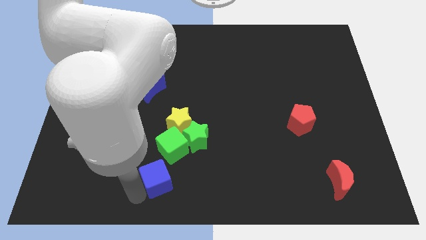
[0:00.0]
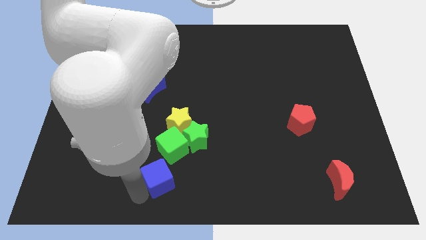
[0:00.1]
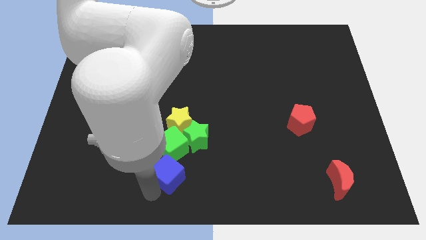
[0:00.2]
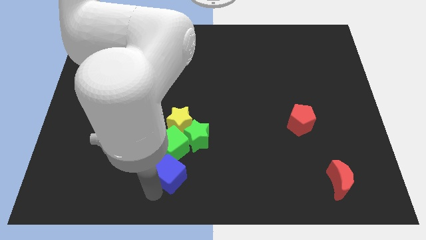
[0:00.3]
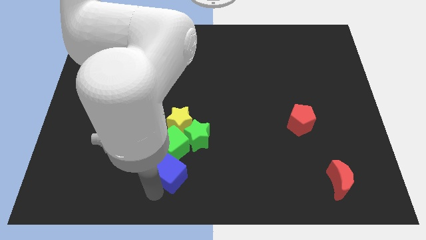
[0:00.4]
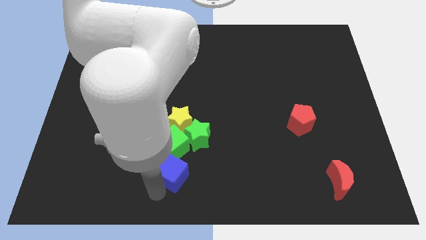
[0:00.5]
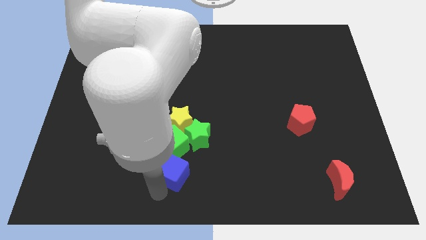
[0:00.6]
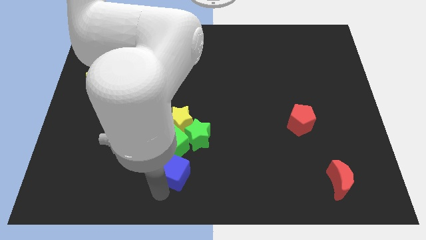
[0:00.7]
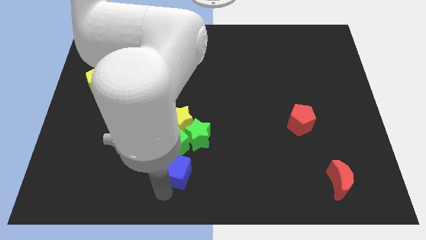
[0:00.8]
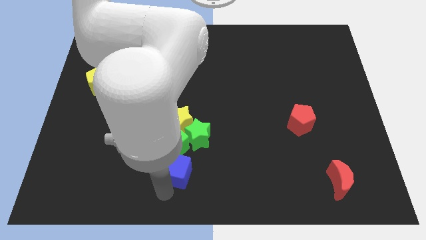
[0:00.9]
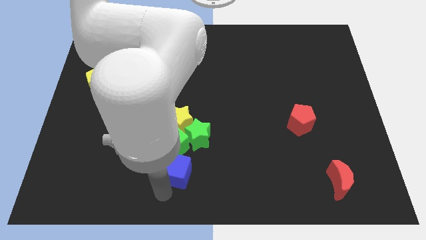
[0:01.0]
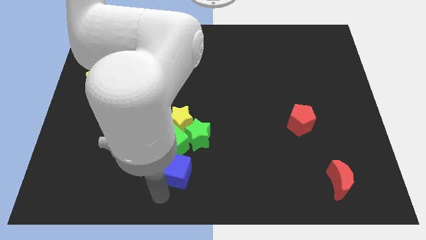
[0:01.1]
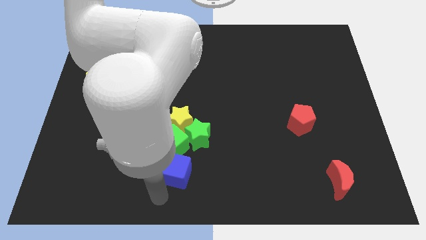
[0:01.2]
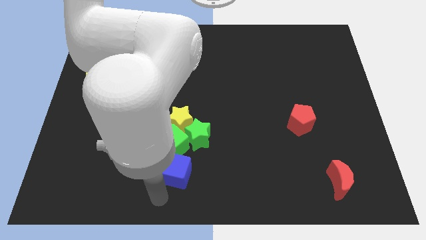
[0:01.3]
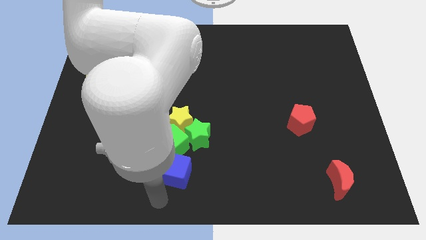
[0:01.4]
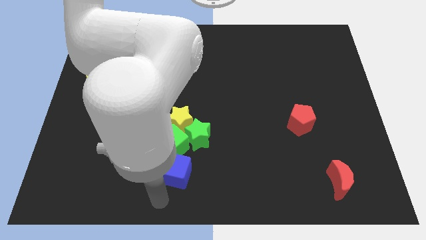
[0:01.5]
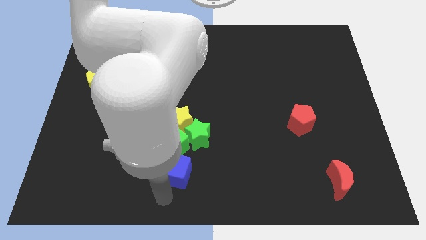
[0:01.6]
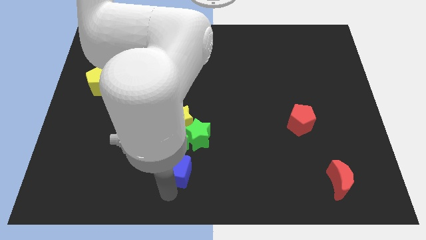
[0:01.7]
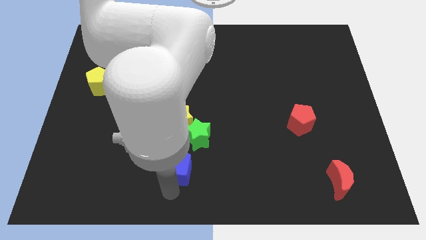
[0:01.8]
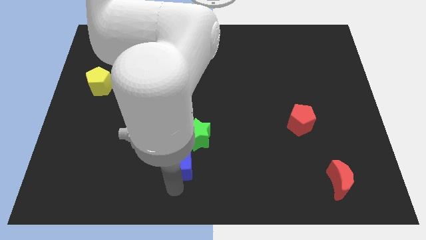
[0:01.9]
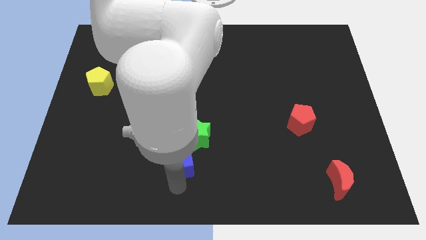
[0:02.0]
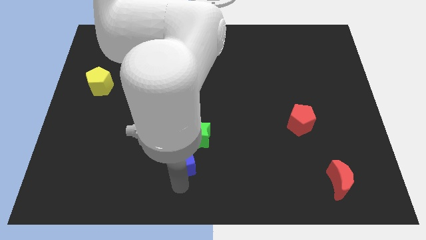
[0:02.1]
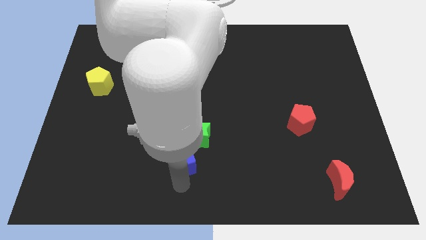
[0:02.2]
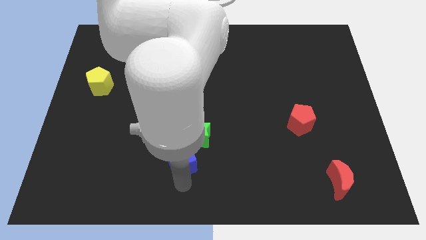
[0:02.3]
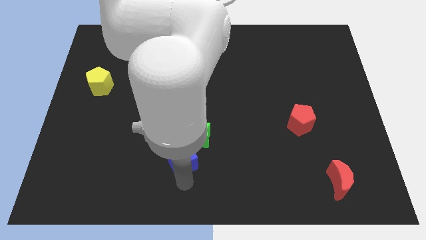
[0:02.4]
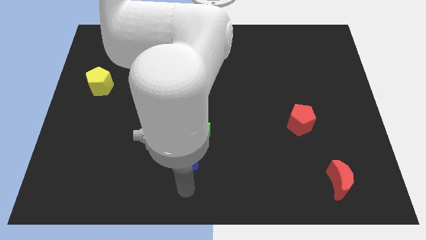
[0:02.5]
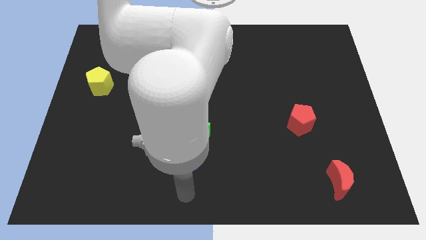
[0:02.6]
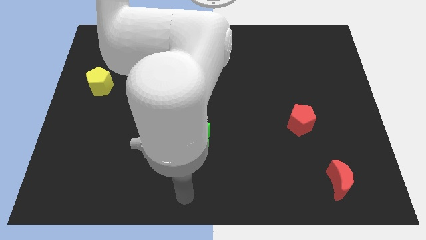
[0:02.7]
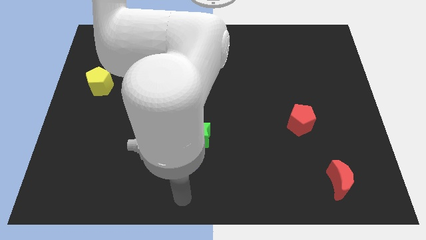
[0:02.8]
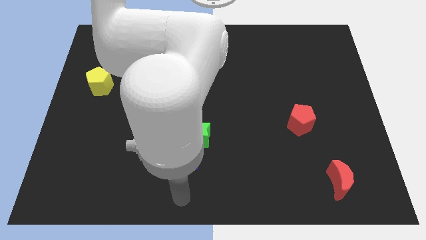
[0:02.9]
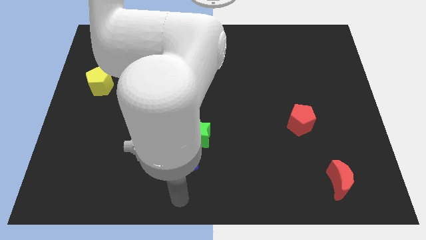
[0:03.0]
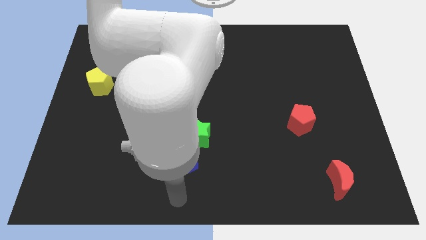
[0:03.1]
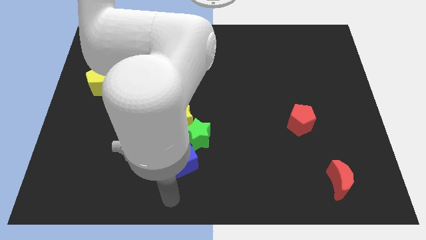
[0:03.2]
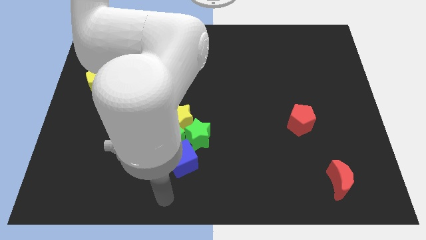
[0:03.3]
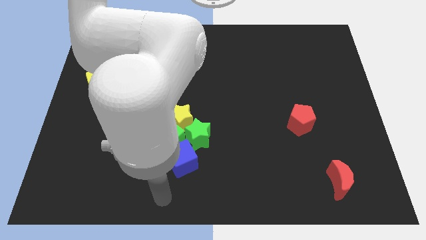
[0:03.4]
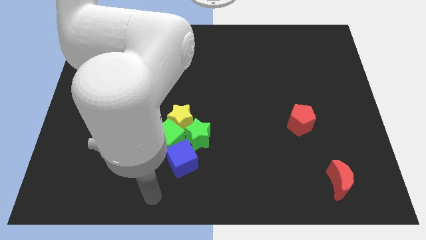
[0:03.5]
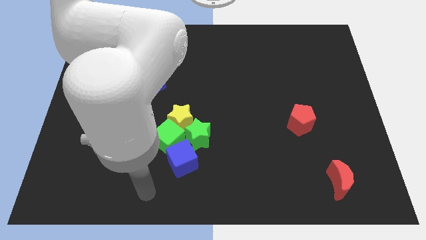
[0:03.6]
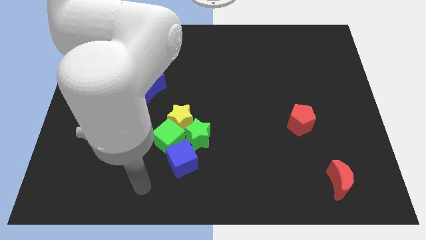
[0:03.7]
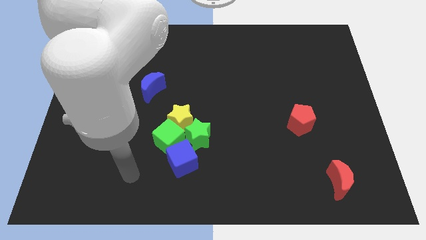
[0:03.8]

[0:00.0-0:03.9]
push the blue cube into the green cube

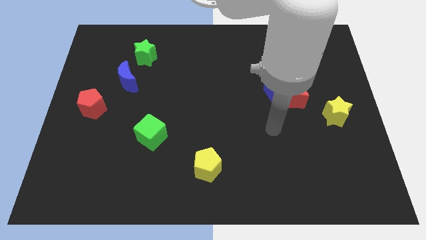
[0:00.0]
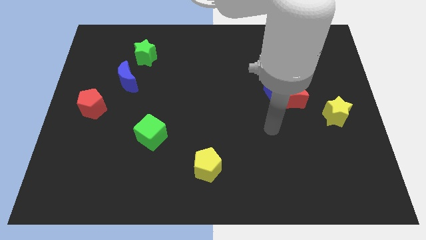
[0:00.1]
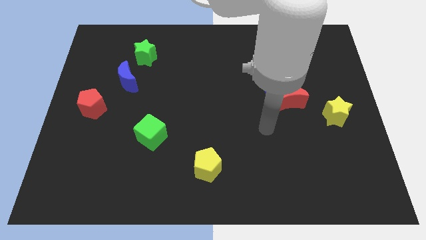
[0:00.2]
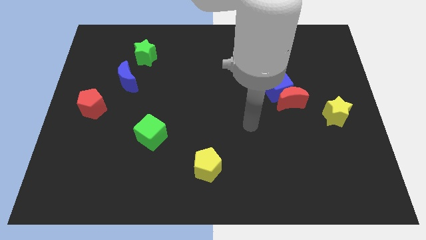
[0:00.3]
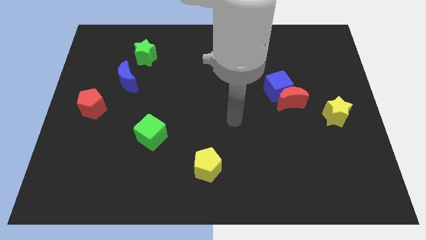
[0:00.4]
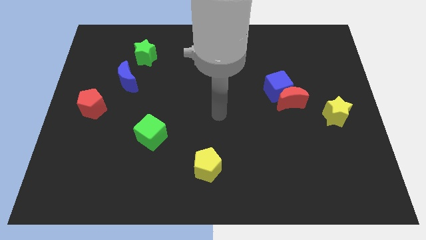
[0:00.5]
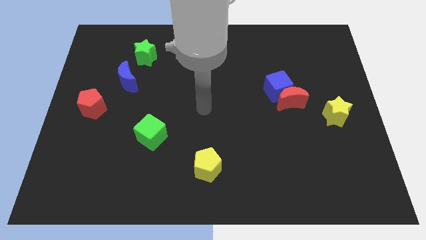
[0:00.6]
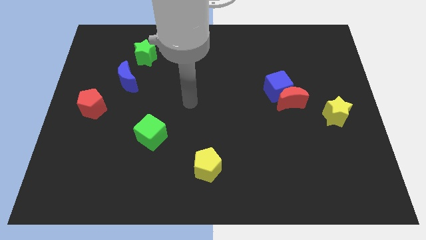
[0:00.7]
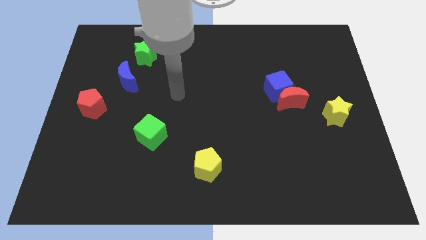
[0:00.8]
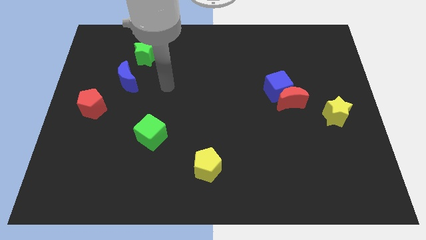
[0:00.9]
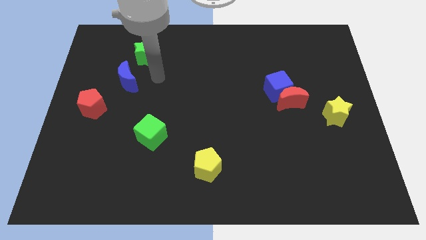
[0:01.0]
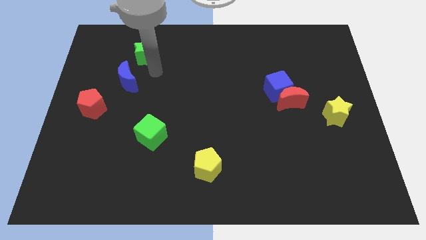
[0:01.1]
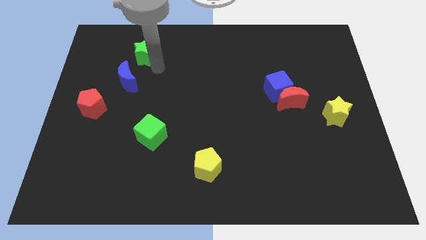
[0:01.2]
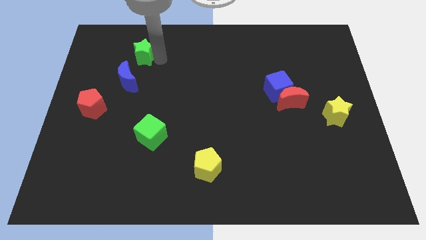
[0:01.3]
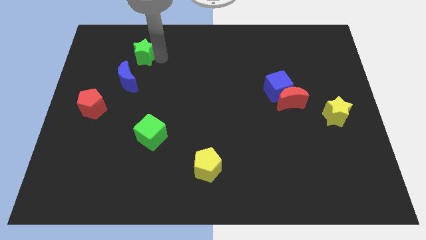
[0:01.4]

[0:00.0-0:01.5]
place the arm right to the green star

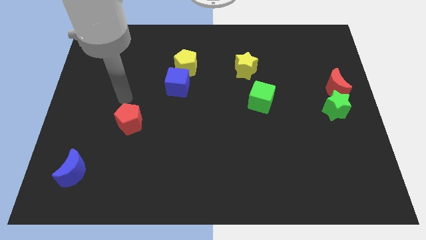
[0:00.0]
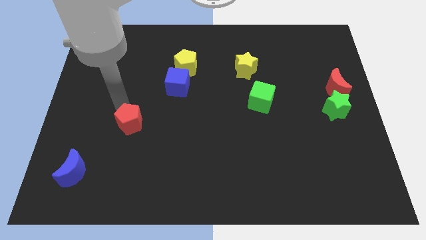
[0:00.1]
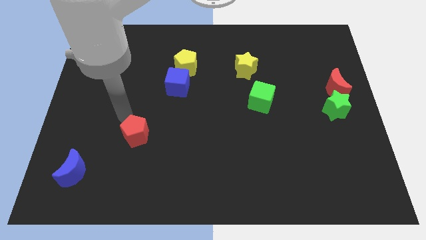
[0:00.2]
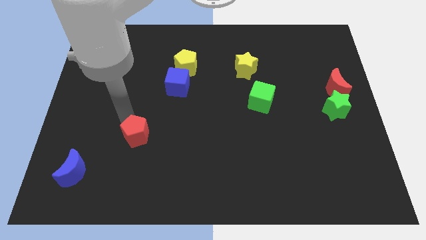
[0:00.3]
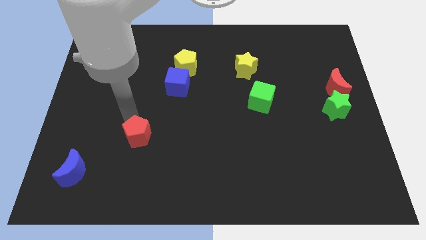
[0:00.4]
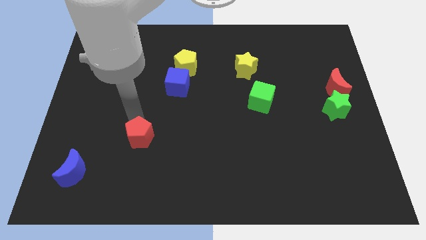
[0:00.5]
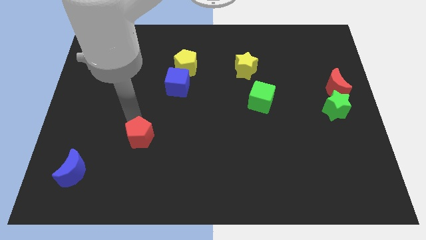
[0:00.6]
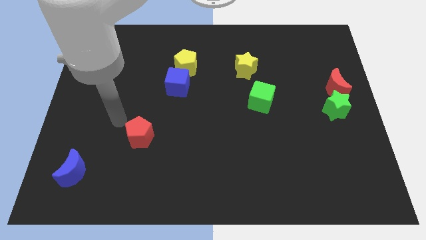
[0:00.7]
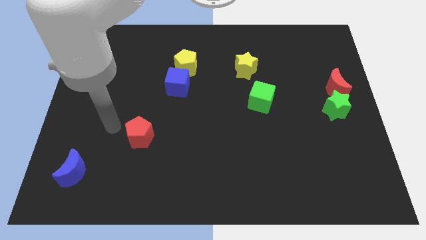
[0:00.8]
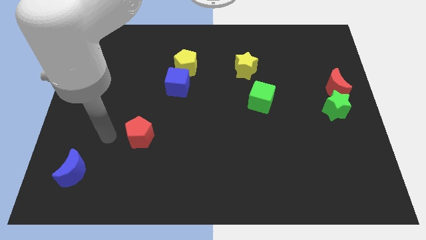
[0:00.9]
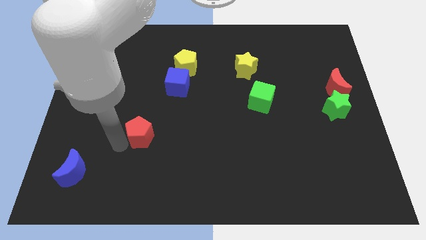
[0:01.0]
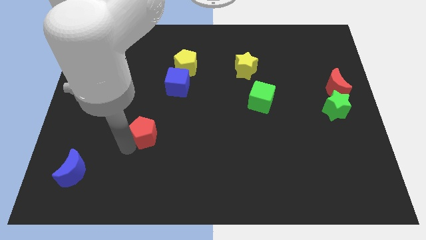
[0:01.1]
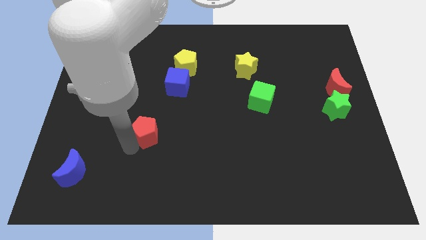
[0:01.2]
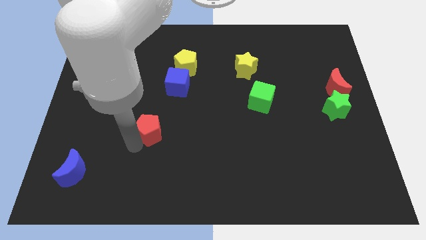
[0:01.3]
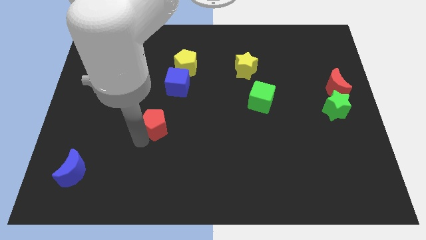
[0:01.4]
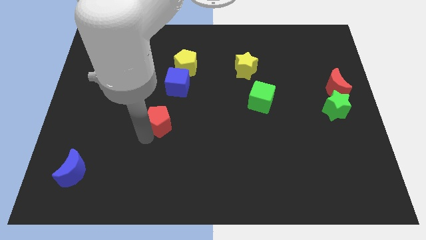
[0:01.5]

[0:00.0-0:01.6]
move the red pentagon to the right of the board

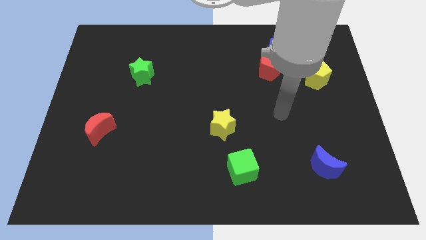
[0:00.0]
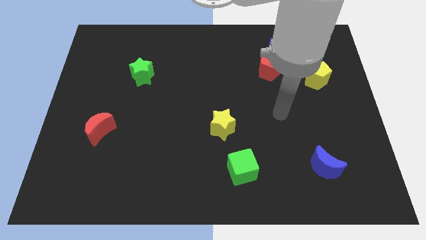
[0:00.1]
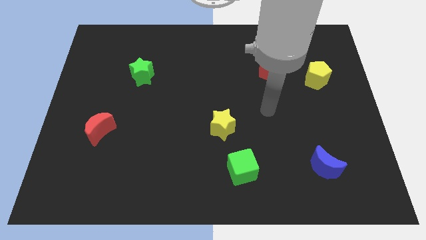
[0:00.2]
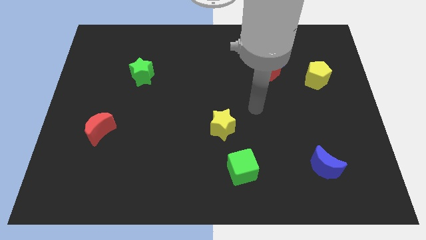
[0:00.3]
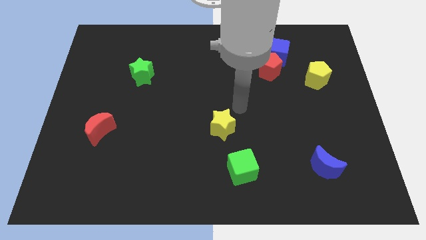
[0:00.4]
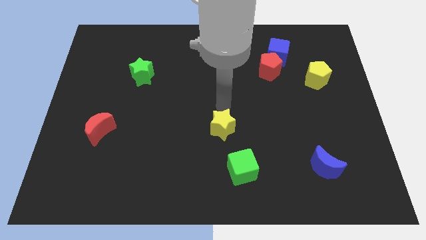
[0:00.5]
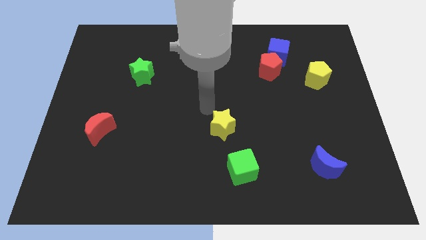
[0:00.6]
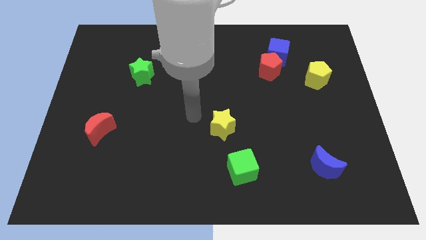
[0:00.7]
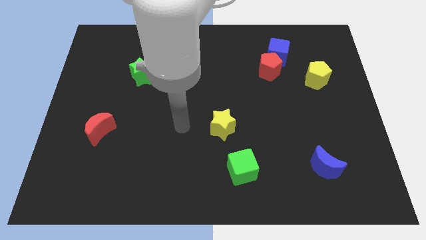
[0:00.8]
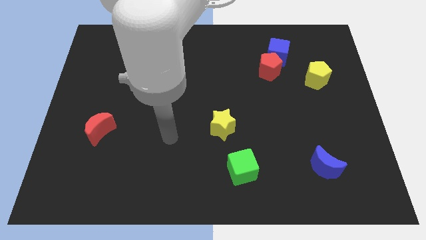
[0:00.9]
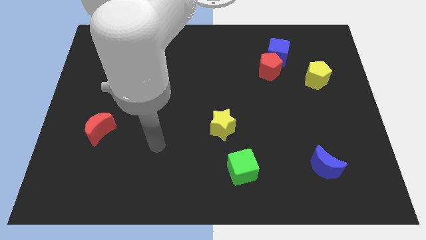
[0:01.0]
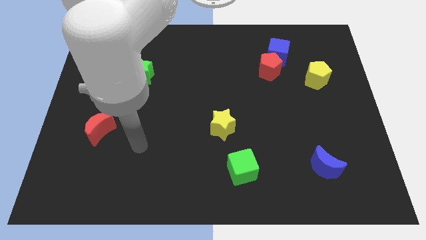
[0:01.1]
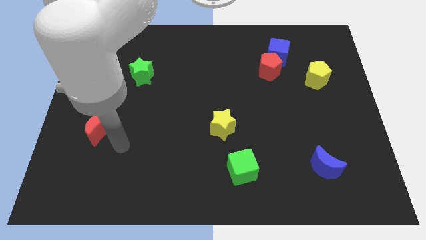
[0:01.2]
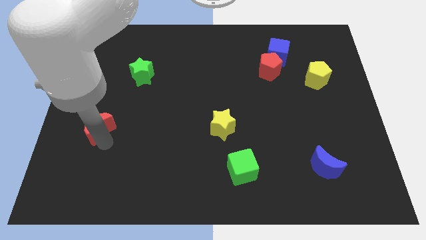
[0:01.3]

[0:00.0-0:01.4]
move your arm towards the red crescent

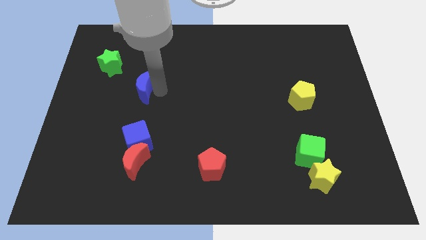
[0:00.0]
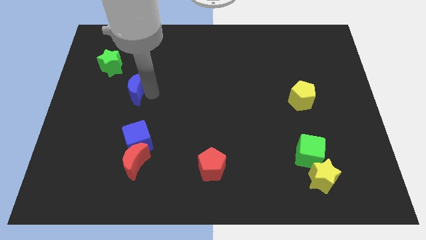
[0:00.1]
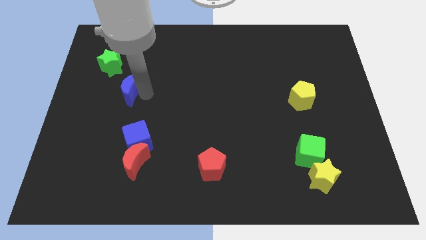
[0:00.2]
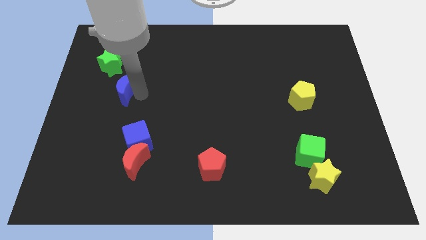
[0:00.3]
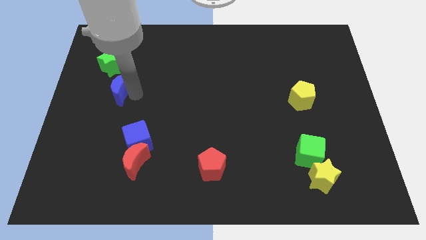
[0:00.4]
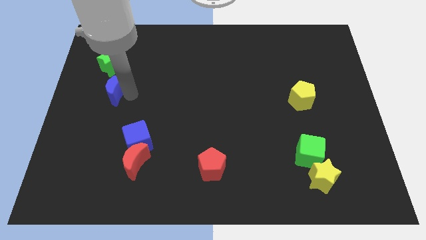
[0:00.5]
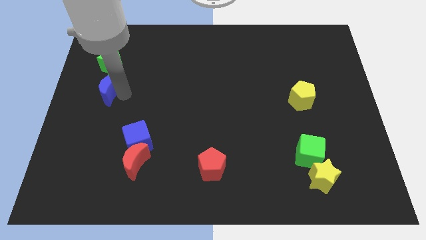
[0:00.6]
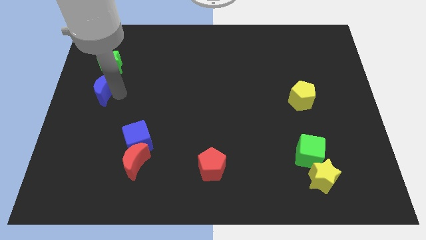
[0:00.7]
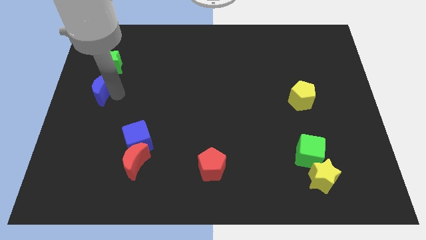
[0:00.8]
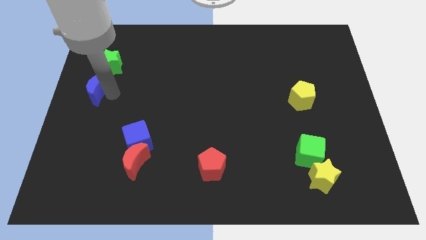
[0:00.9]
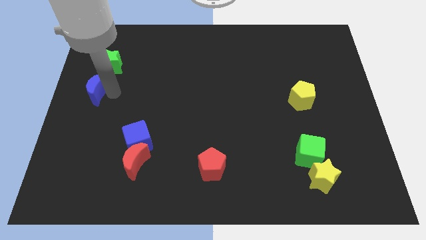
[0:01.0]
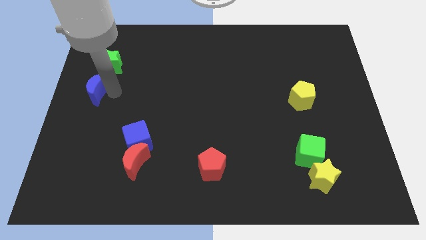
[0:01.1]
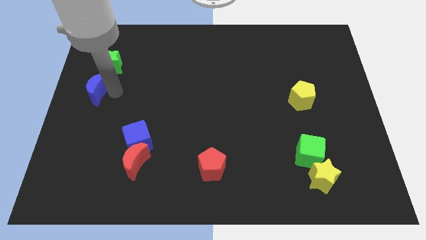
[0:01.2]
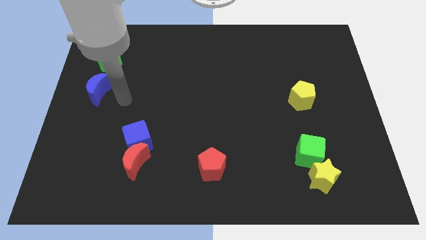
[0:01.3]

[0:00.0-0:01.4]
place the blue crescent at the bottom side of the green star
